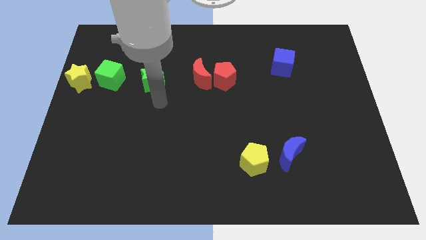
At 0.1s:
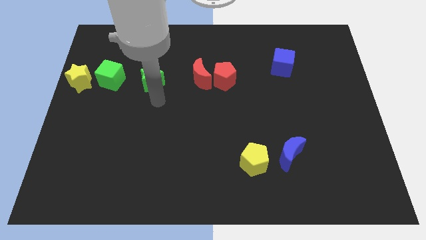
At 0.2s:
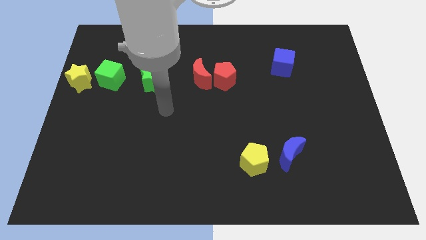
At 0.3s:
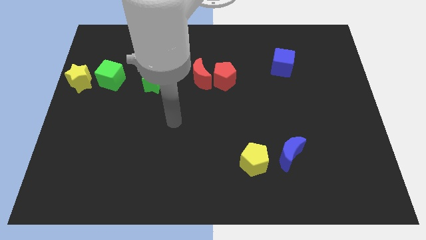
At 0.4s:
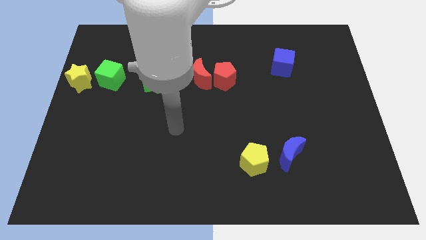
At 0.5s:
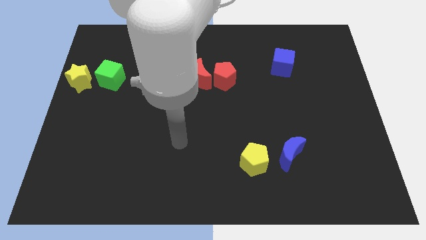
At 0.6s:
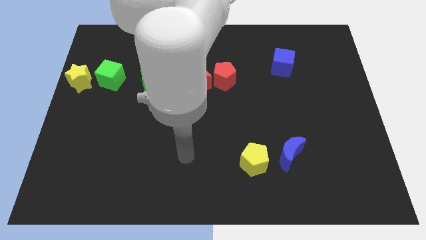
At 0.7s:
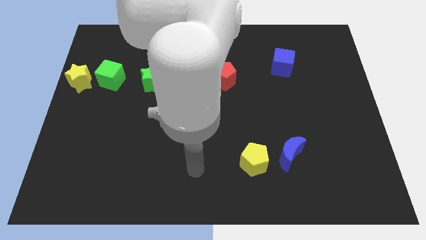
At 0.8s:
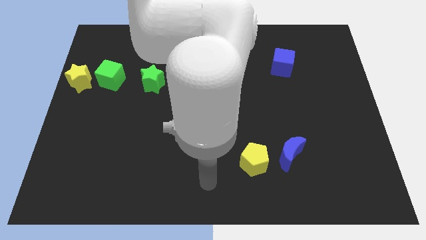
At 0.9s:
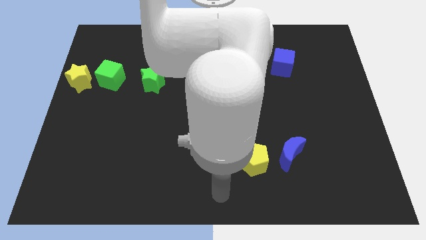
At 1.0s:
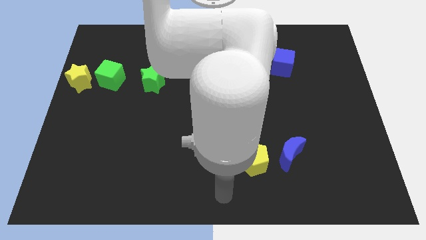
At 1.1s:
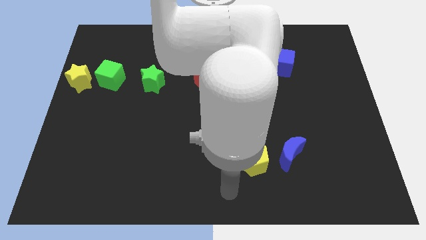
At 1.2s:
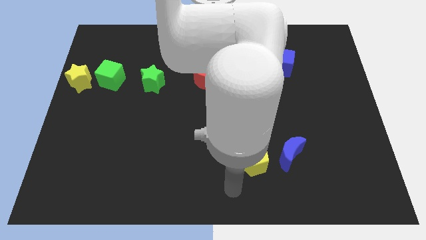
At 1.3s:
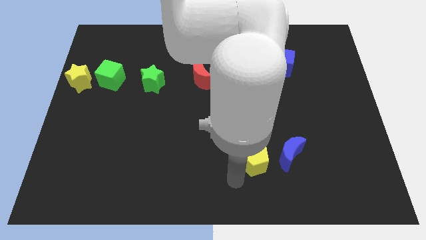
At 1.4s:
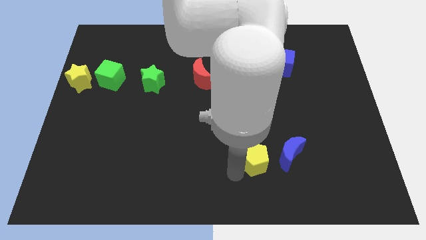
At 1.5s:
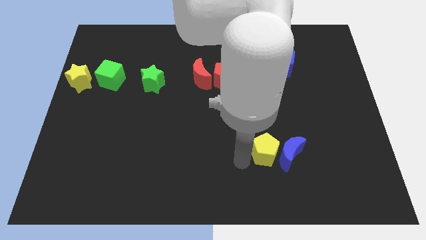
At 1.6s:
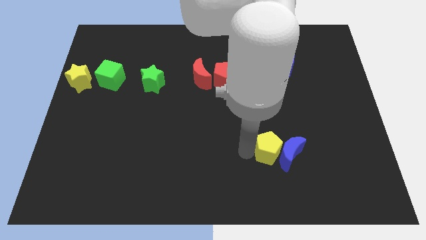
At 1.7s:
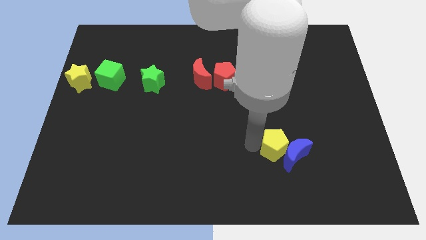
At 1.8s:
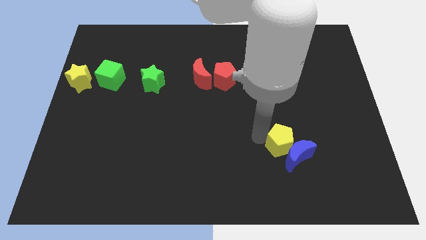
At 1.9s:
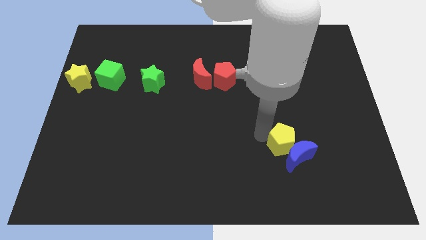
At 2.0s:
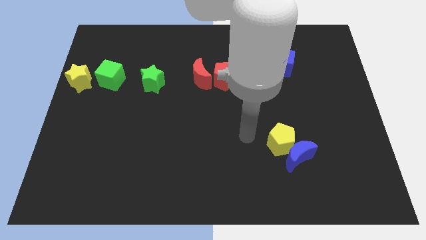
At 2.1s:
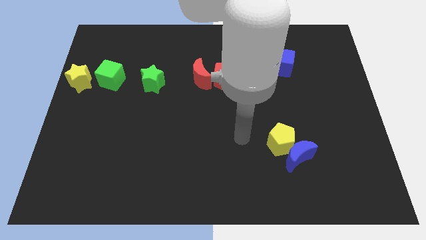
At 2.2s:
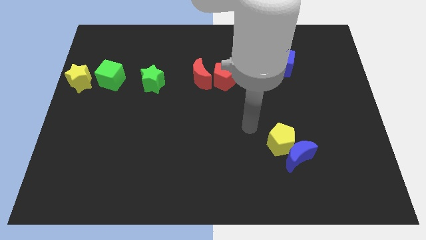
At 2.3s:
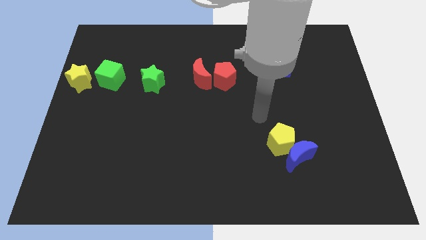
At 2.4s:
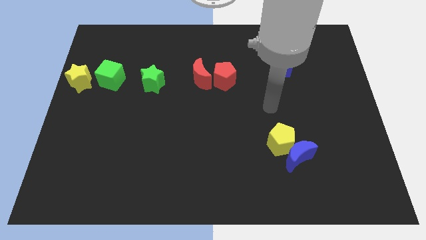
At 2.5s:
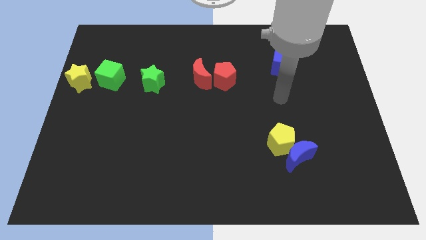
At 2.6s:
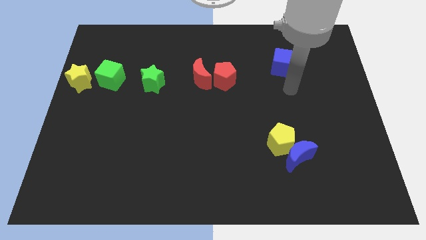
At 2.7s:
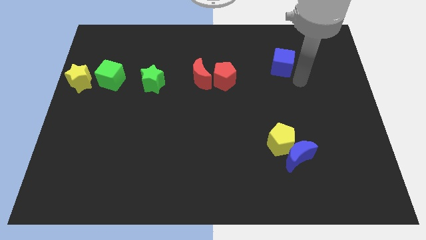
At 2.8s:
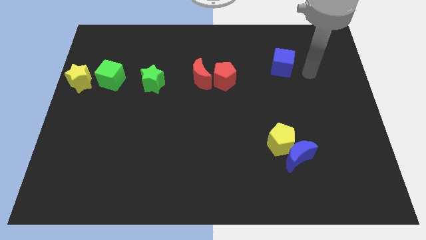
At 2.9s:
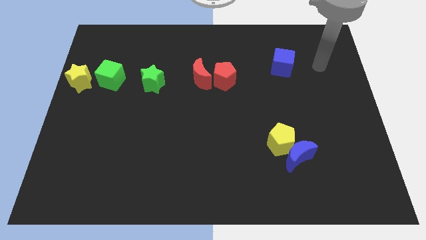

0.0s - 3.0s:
push the yellow pentagon into the blue crescent

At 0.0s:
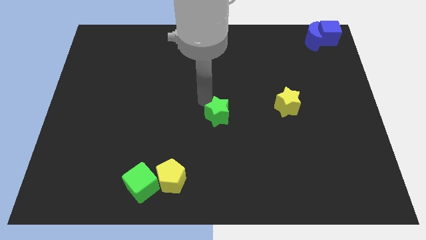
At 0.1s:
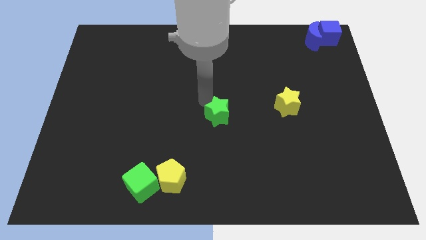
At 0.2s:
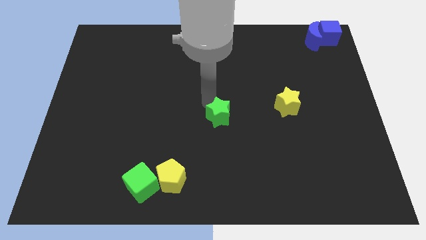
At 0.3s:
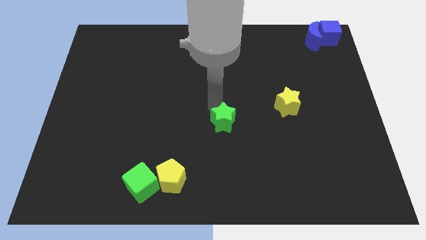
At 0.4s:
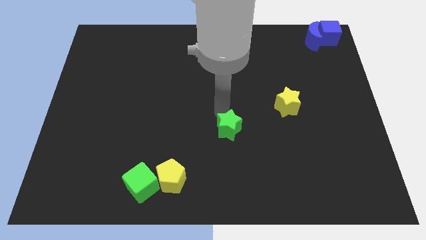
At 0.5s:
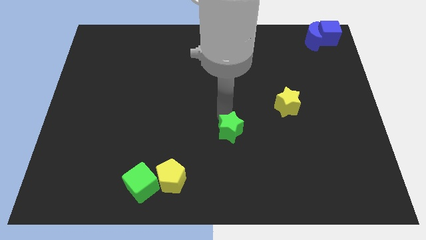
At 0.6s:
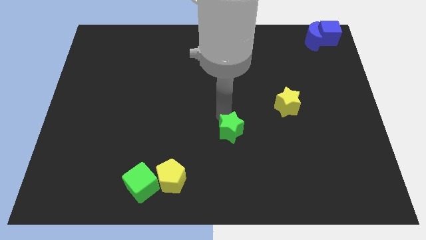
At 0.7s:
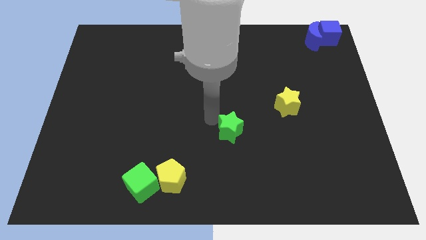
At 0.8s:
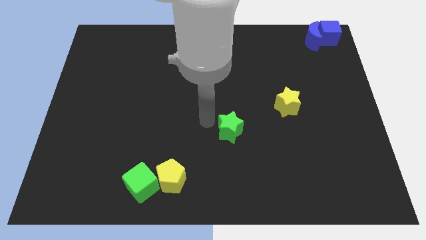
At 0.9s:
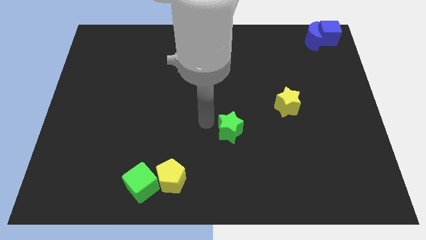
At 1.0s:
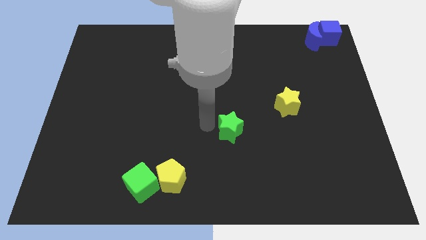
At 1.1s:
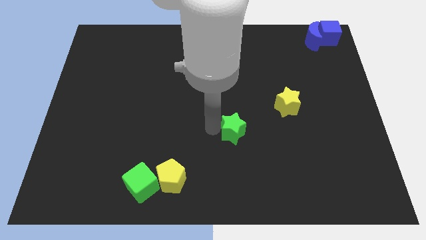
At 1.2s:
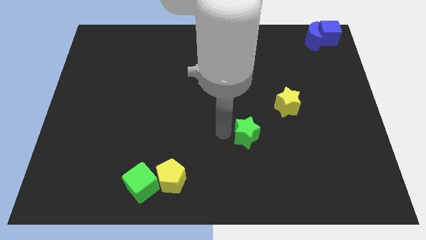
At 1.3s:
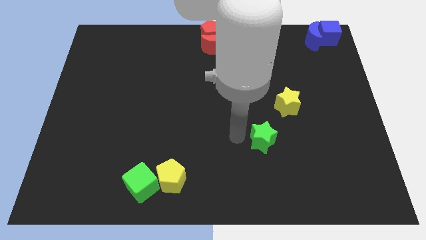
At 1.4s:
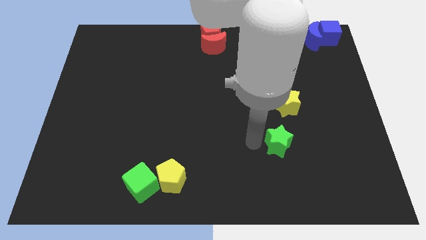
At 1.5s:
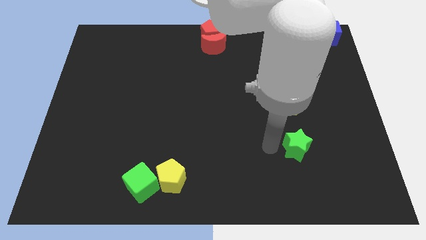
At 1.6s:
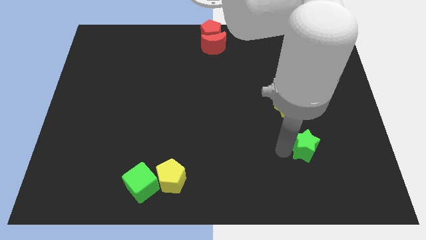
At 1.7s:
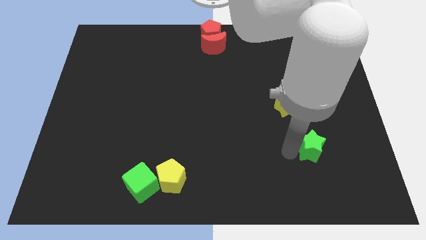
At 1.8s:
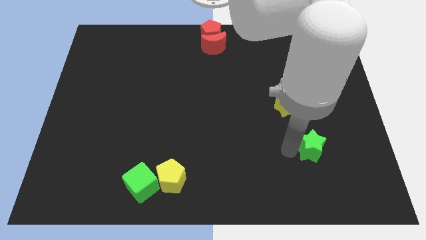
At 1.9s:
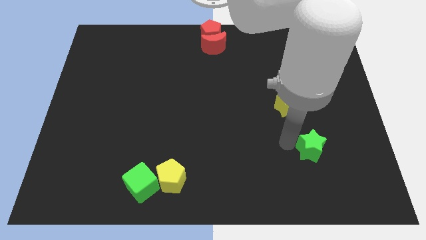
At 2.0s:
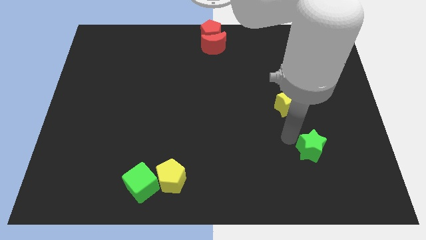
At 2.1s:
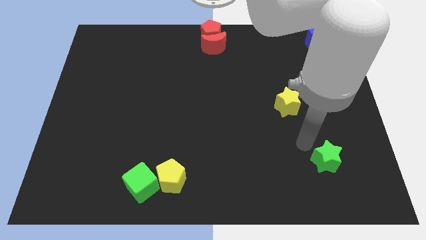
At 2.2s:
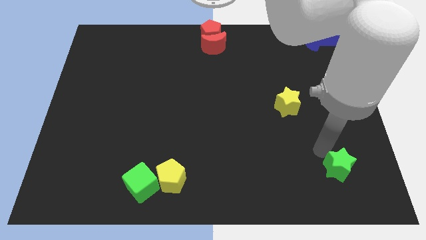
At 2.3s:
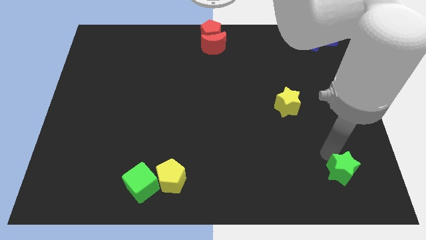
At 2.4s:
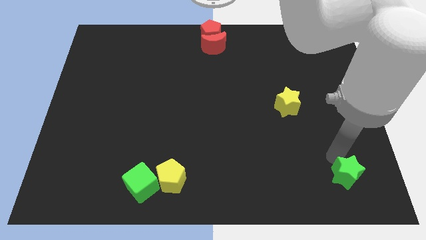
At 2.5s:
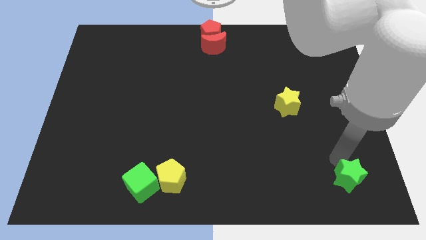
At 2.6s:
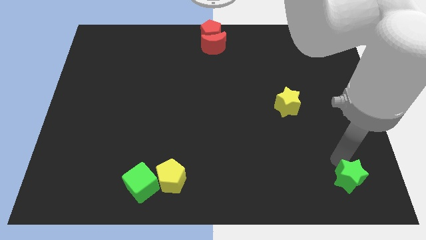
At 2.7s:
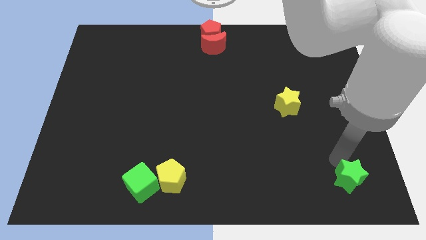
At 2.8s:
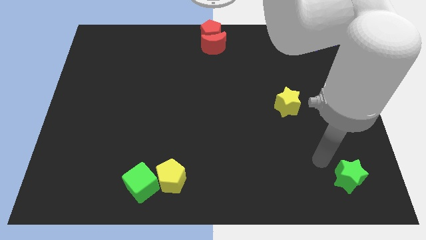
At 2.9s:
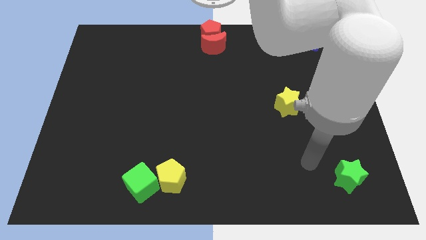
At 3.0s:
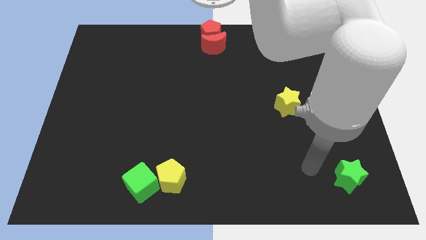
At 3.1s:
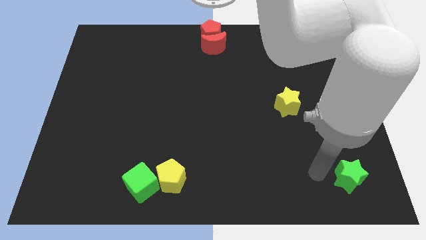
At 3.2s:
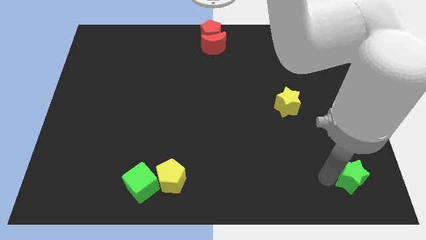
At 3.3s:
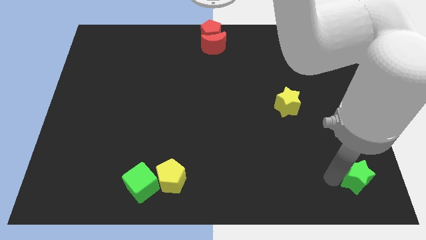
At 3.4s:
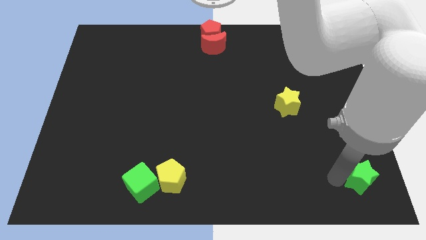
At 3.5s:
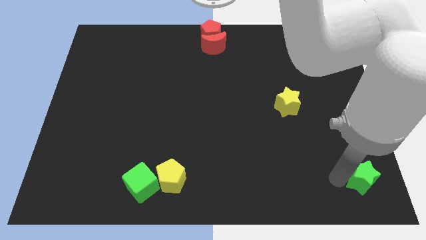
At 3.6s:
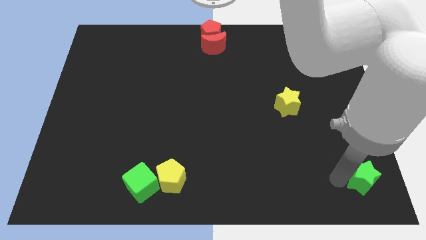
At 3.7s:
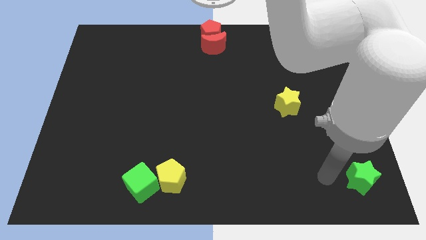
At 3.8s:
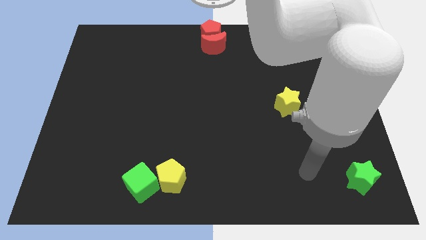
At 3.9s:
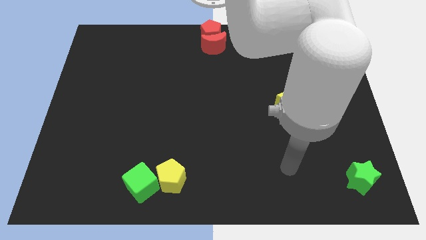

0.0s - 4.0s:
push the green star to the bottom right of the board

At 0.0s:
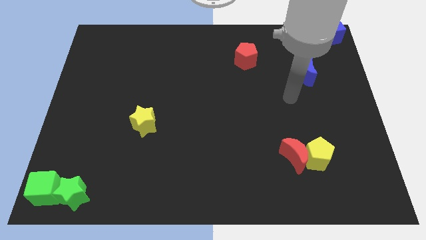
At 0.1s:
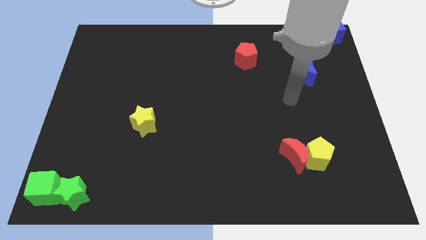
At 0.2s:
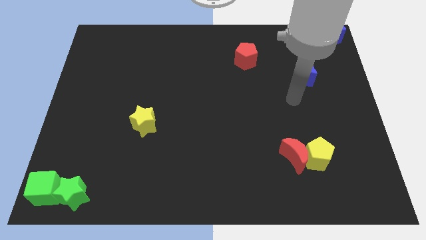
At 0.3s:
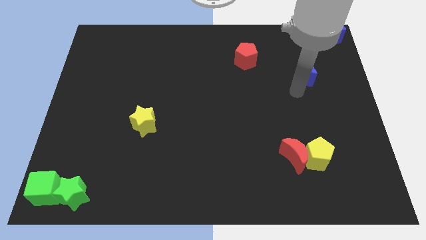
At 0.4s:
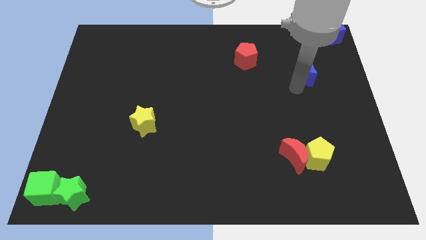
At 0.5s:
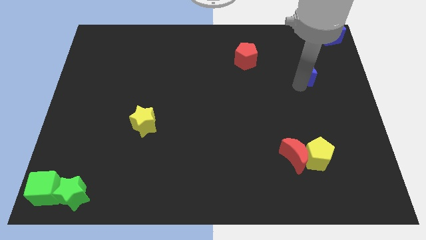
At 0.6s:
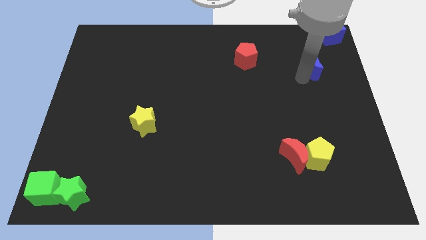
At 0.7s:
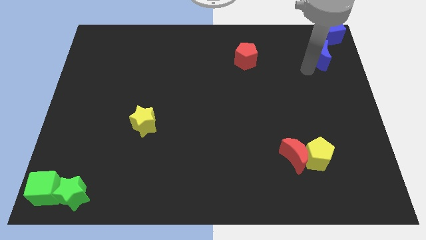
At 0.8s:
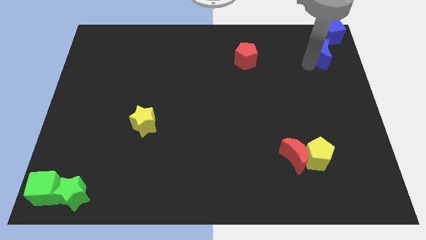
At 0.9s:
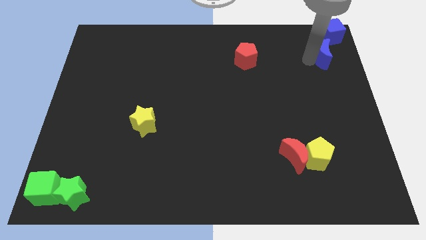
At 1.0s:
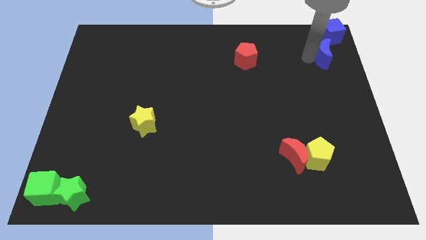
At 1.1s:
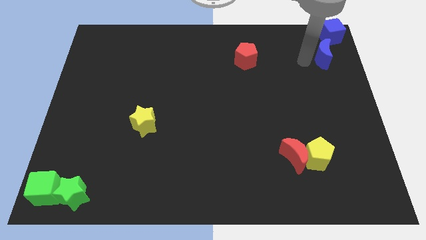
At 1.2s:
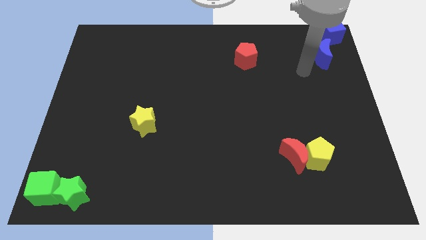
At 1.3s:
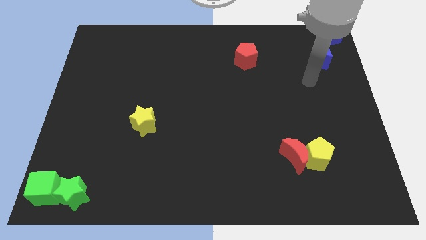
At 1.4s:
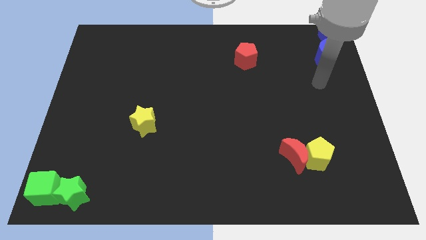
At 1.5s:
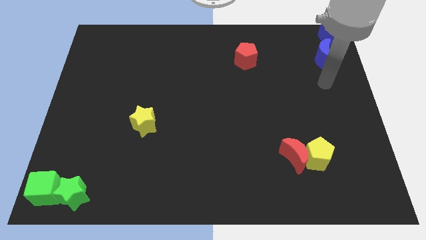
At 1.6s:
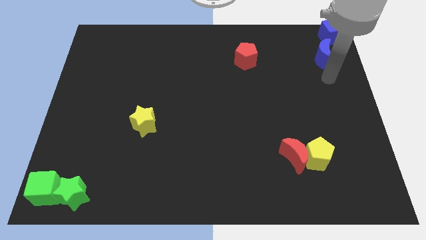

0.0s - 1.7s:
push the blue crescent to the bottom left of the blue cube

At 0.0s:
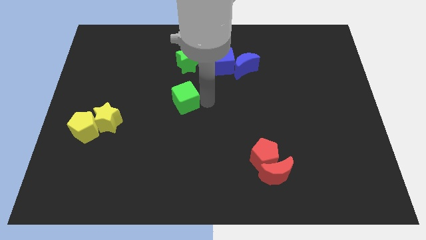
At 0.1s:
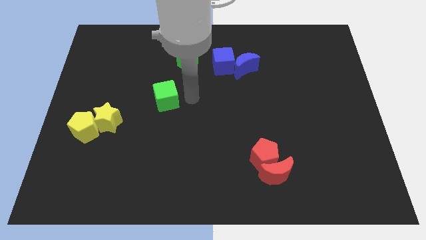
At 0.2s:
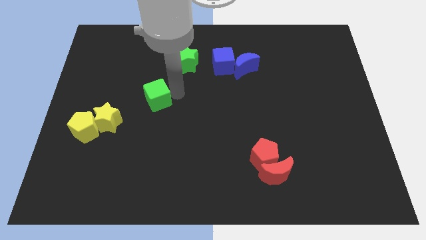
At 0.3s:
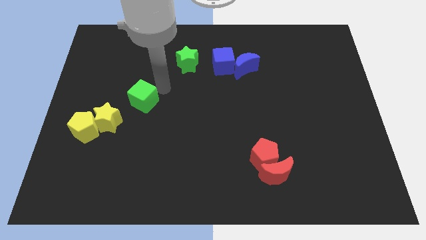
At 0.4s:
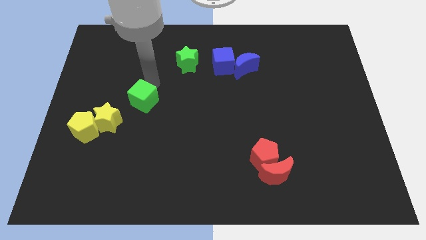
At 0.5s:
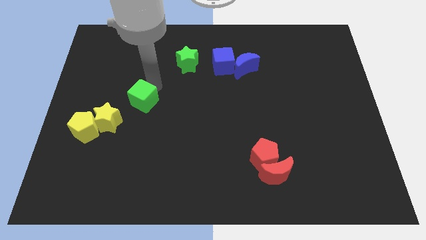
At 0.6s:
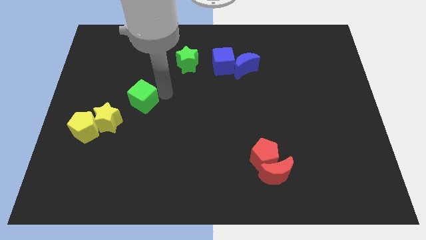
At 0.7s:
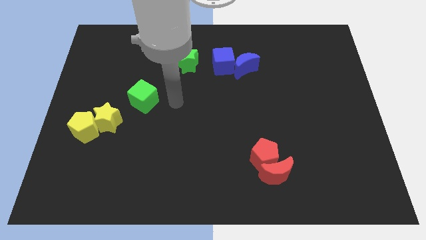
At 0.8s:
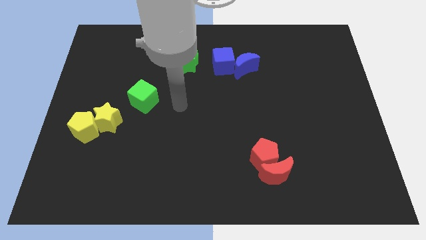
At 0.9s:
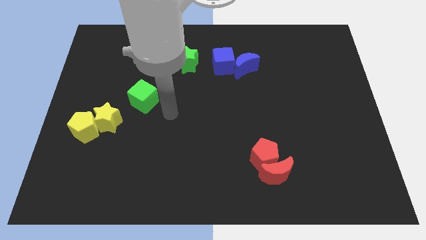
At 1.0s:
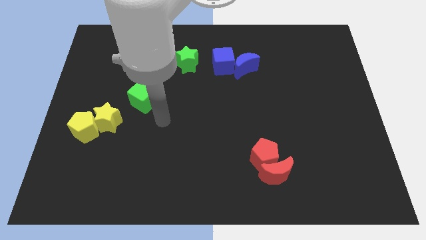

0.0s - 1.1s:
push green cube diagonally above yellow star
